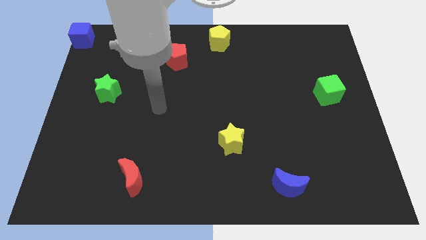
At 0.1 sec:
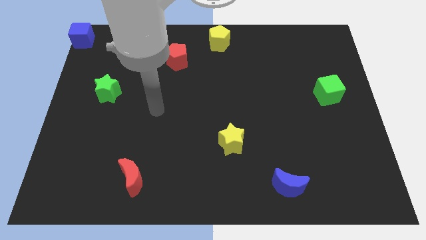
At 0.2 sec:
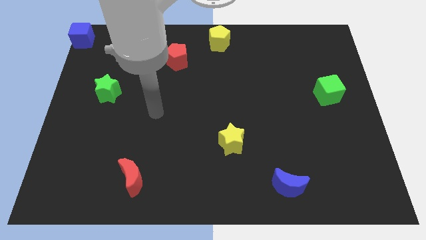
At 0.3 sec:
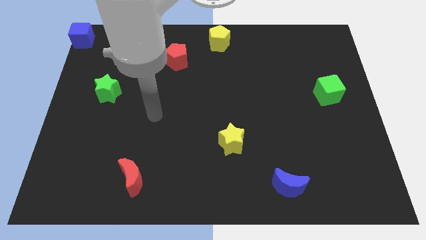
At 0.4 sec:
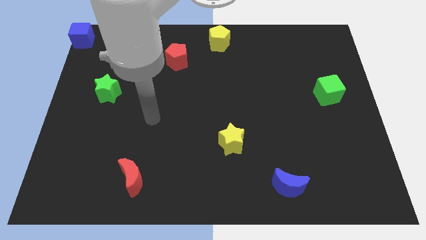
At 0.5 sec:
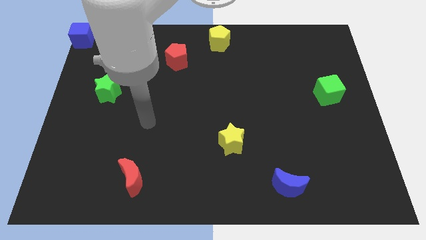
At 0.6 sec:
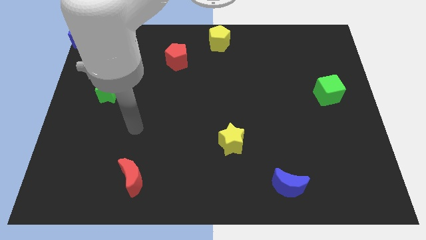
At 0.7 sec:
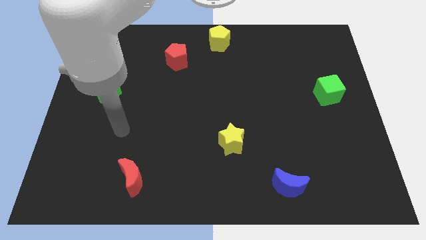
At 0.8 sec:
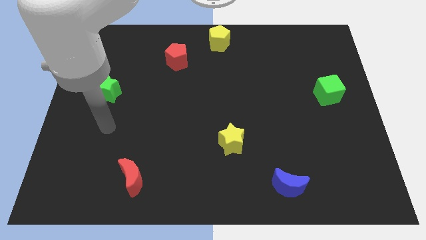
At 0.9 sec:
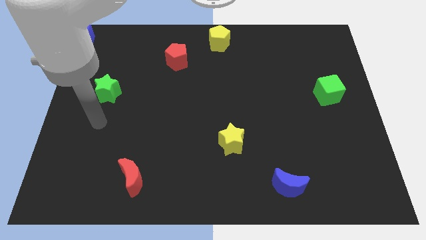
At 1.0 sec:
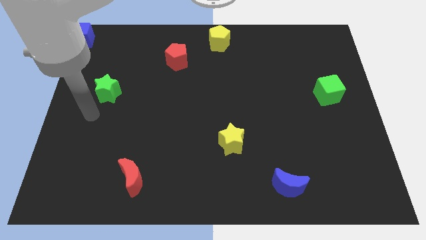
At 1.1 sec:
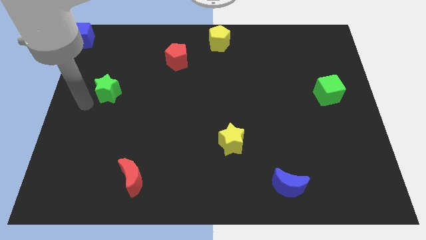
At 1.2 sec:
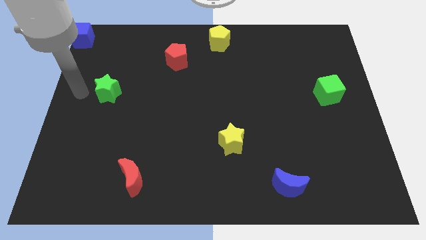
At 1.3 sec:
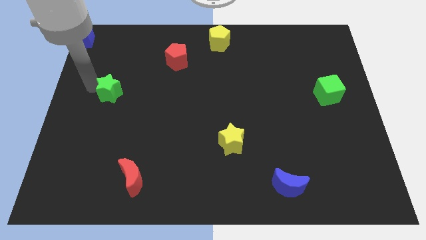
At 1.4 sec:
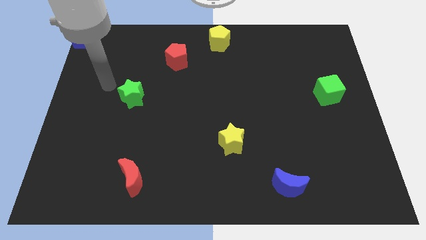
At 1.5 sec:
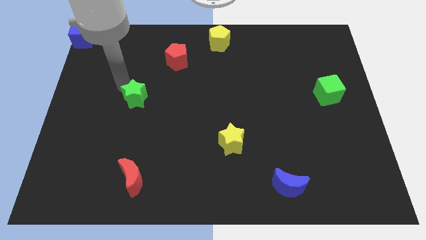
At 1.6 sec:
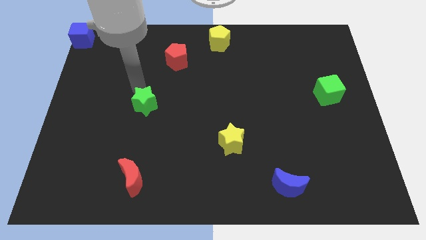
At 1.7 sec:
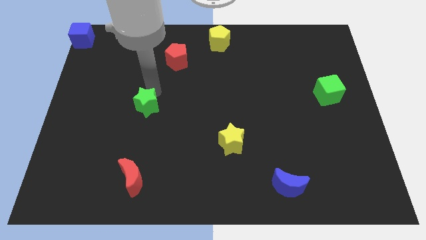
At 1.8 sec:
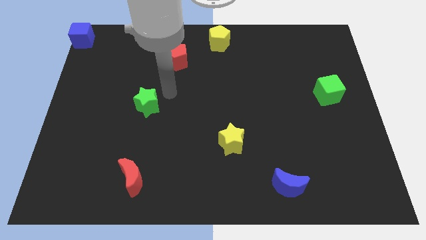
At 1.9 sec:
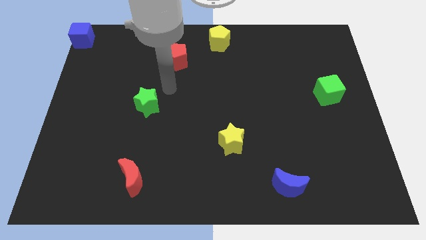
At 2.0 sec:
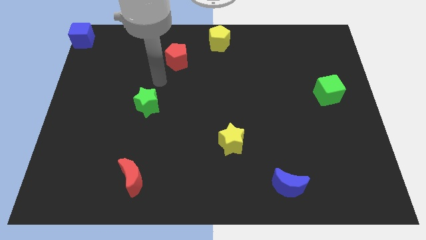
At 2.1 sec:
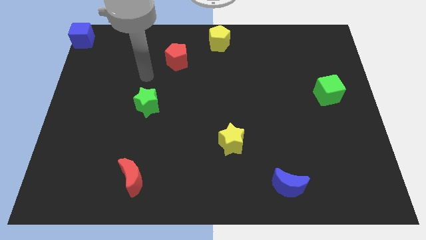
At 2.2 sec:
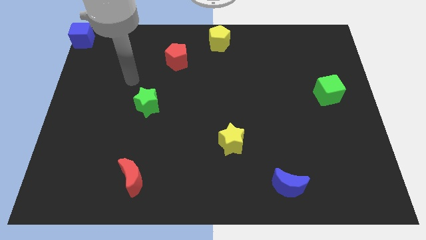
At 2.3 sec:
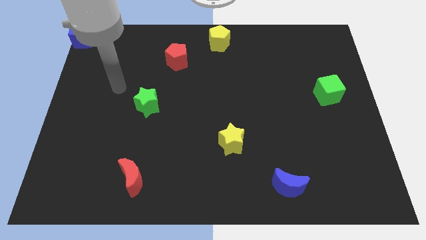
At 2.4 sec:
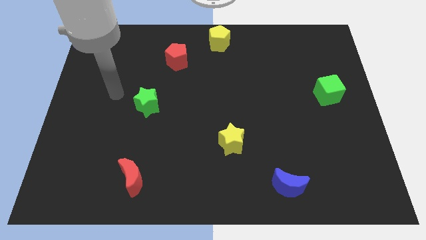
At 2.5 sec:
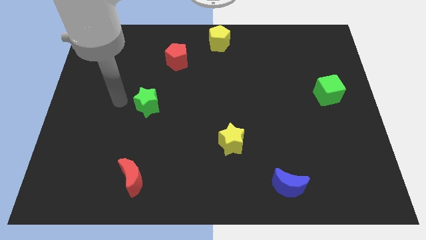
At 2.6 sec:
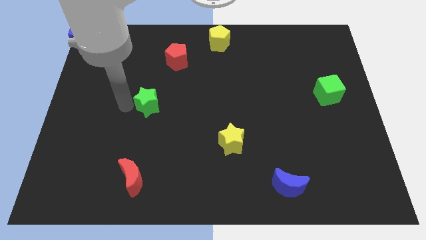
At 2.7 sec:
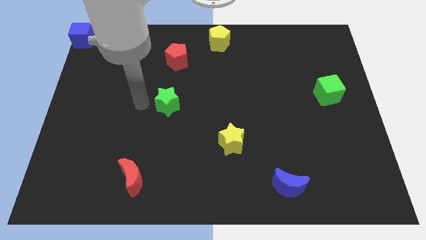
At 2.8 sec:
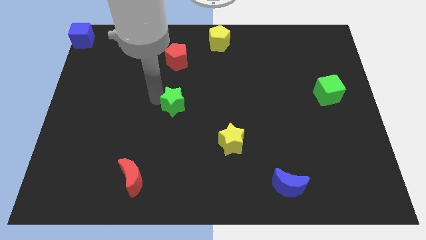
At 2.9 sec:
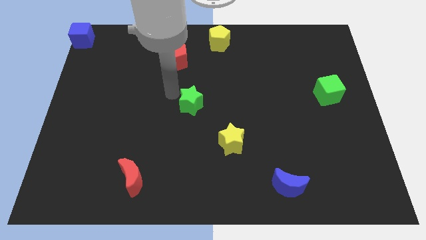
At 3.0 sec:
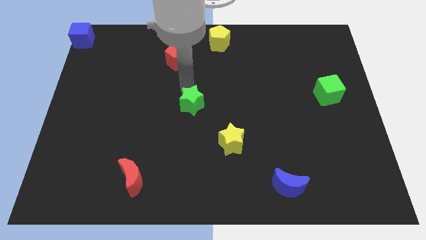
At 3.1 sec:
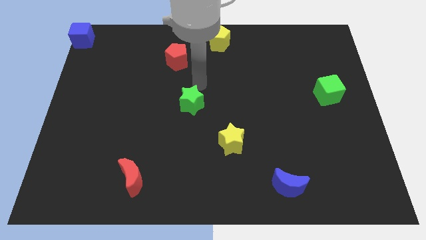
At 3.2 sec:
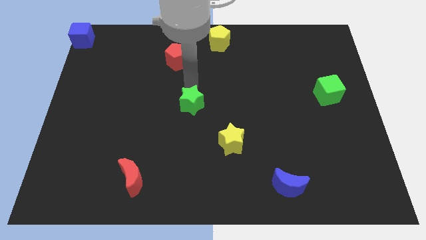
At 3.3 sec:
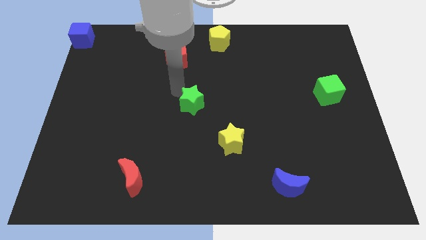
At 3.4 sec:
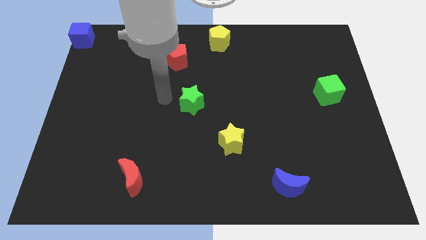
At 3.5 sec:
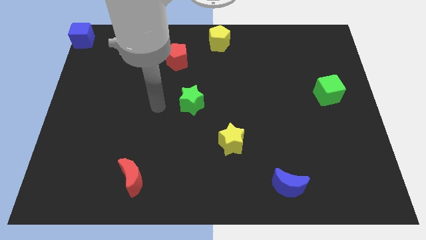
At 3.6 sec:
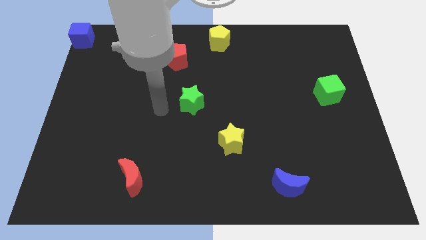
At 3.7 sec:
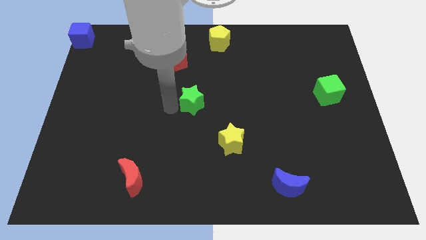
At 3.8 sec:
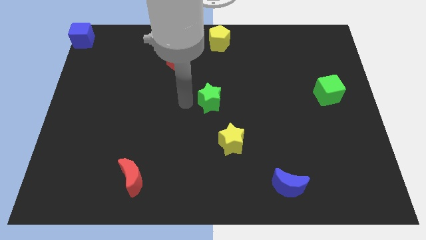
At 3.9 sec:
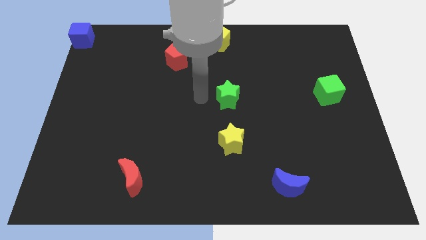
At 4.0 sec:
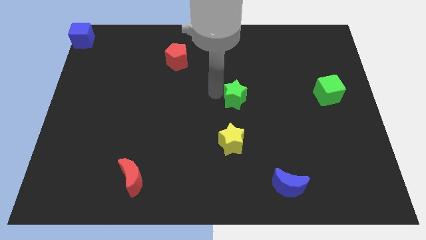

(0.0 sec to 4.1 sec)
place the green star at the top of yellow star

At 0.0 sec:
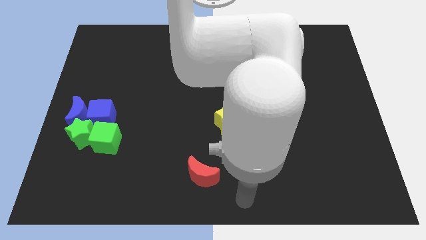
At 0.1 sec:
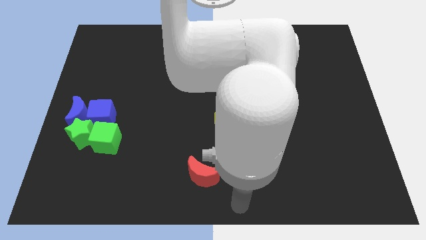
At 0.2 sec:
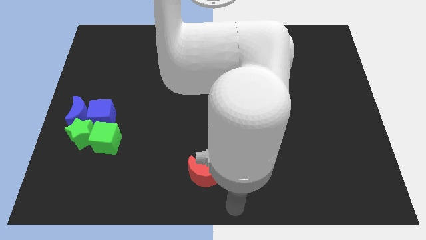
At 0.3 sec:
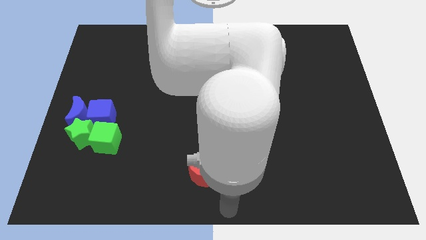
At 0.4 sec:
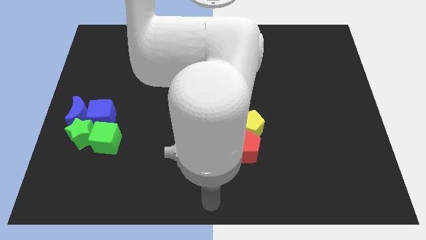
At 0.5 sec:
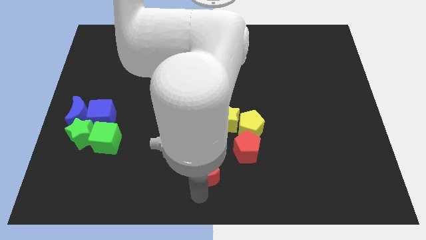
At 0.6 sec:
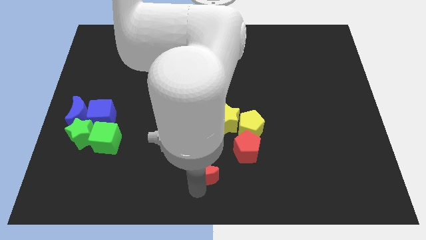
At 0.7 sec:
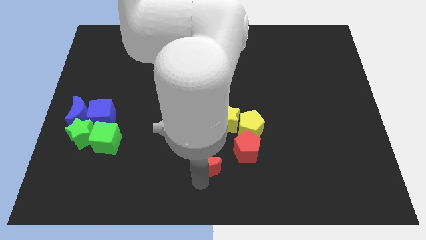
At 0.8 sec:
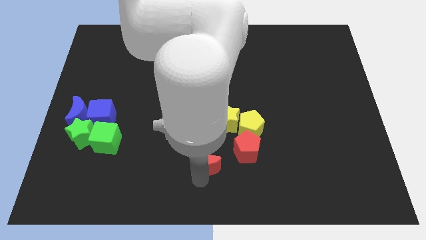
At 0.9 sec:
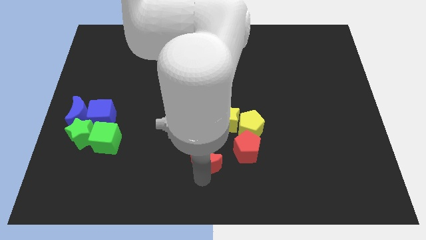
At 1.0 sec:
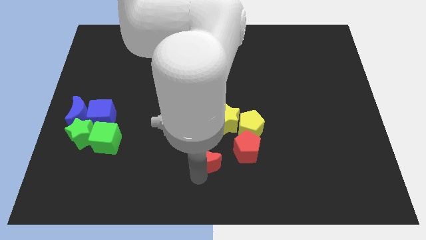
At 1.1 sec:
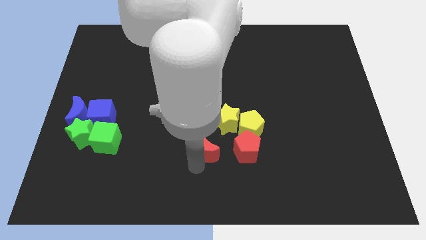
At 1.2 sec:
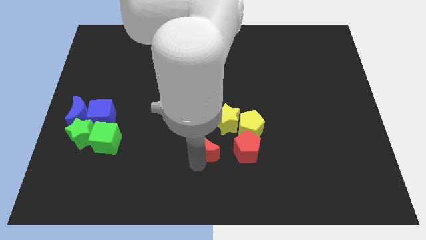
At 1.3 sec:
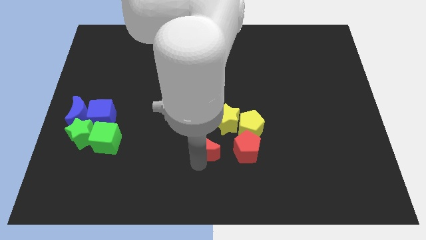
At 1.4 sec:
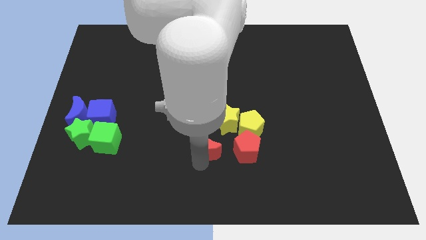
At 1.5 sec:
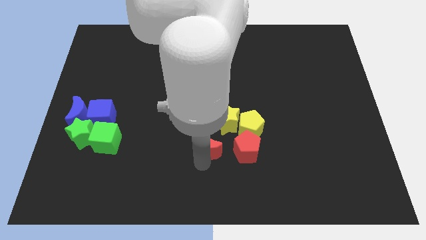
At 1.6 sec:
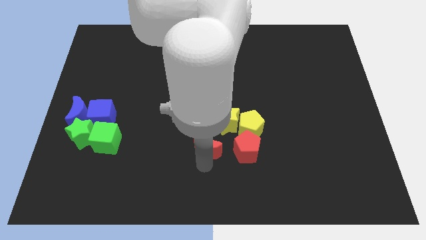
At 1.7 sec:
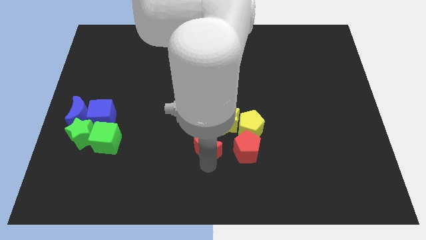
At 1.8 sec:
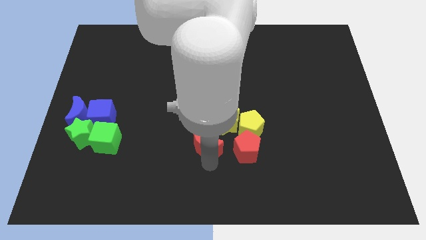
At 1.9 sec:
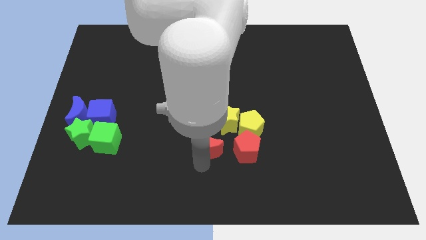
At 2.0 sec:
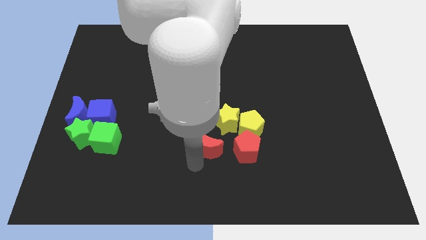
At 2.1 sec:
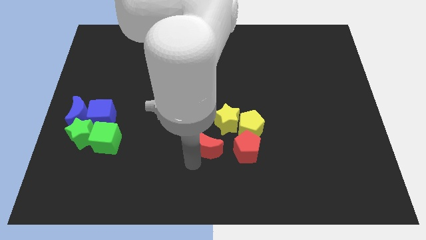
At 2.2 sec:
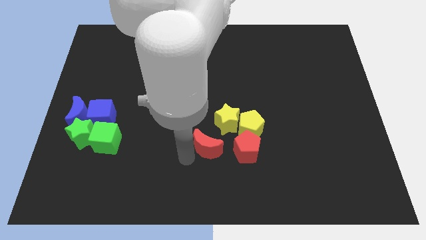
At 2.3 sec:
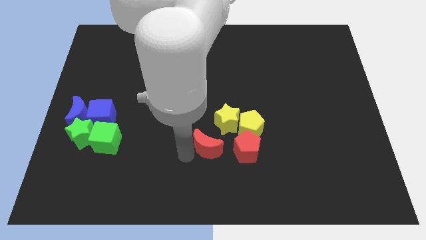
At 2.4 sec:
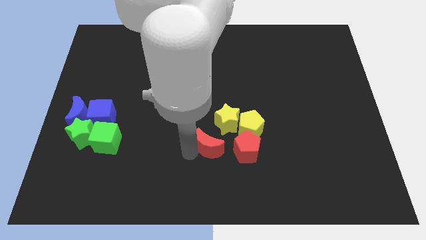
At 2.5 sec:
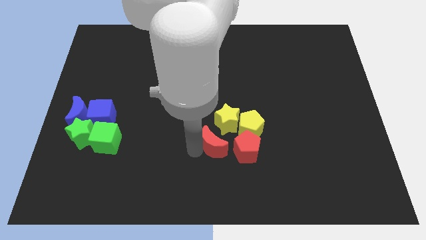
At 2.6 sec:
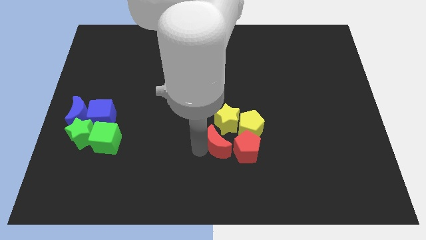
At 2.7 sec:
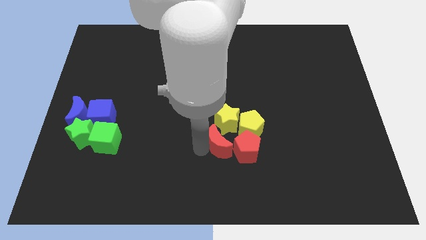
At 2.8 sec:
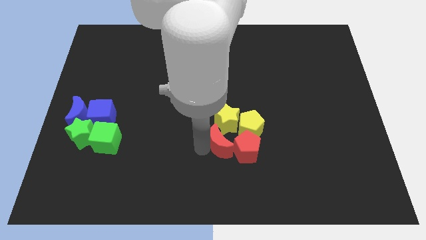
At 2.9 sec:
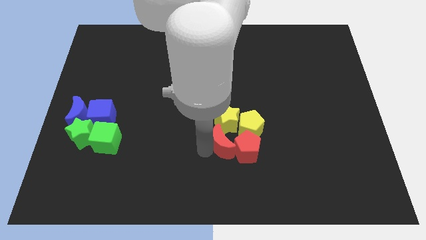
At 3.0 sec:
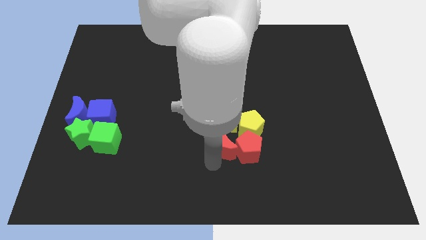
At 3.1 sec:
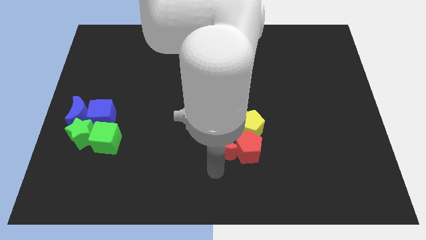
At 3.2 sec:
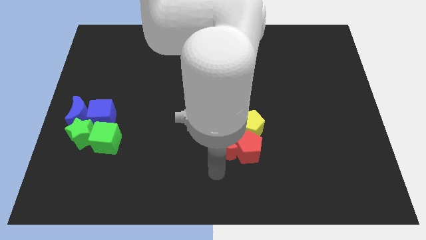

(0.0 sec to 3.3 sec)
place the red moon to the left of the red pentagon

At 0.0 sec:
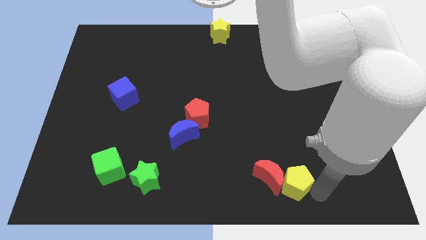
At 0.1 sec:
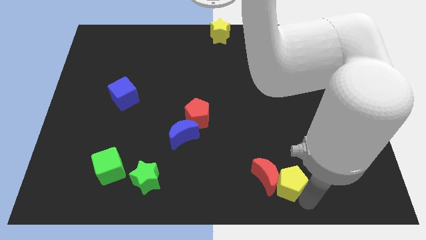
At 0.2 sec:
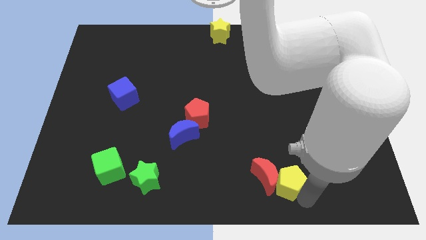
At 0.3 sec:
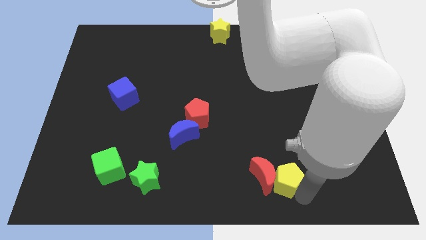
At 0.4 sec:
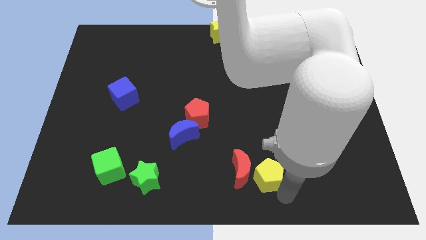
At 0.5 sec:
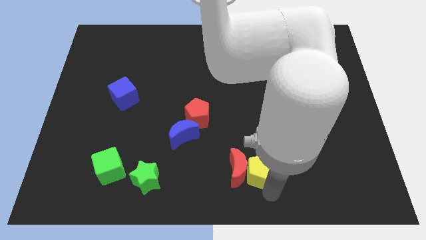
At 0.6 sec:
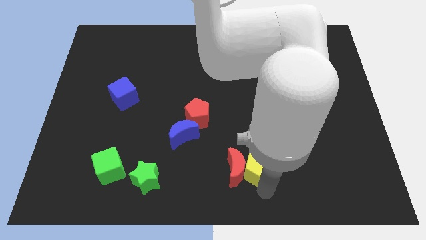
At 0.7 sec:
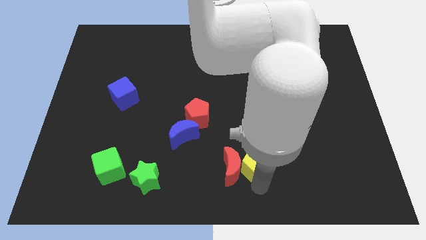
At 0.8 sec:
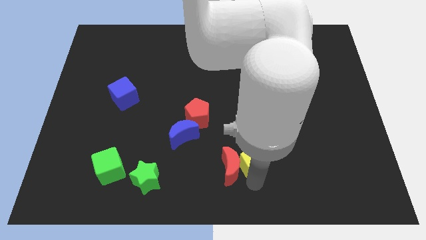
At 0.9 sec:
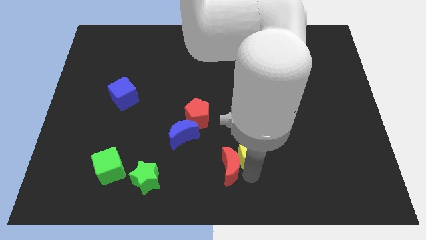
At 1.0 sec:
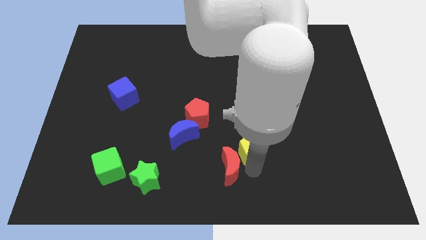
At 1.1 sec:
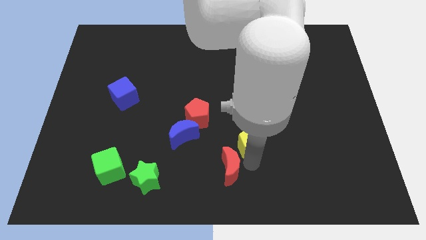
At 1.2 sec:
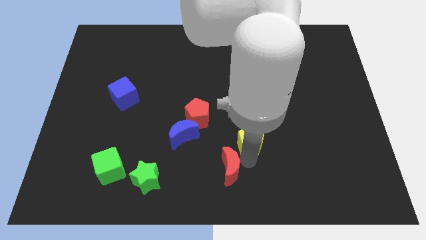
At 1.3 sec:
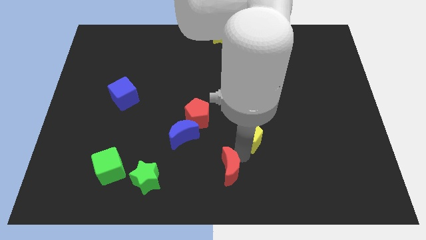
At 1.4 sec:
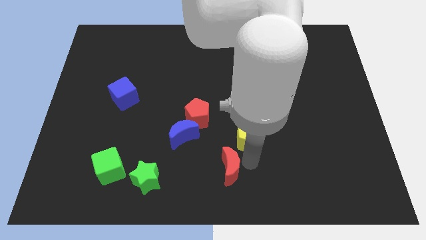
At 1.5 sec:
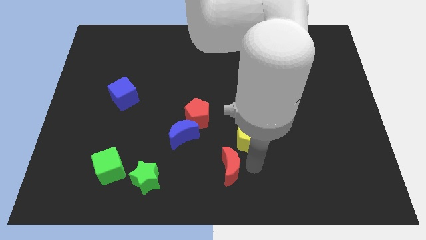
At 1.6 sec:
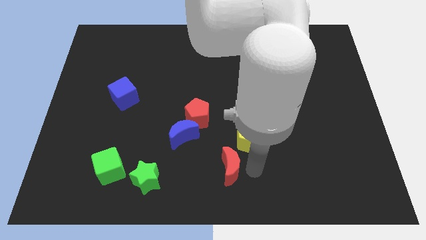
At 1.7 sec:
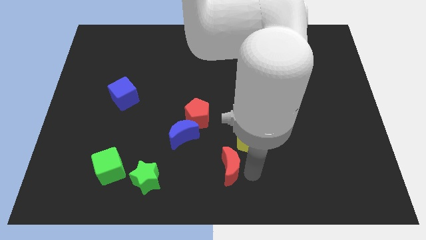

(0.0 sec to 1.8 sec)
separate the yellow pentagon from the red crescent
